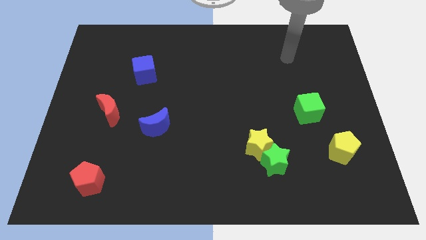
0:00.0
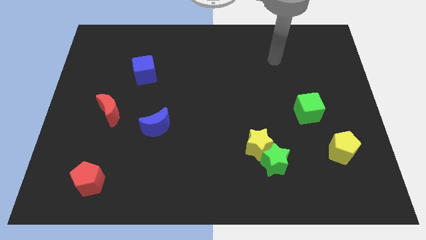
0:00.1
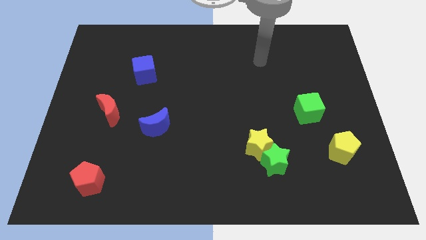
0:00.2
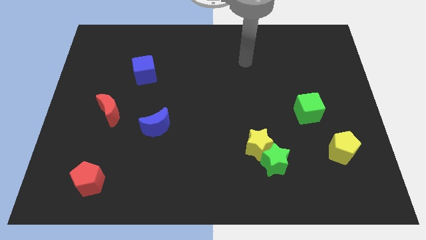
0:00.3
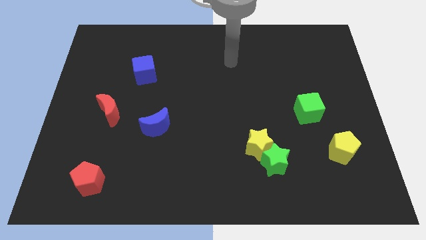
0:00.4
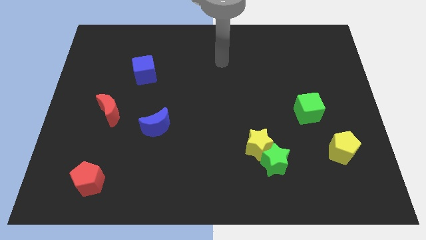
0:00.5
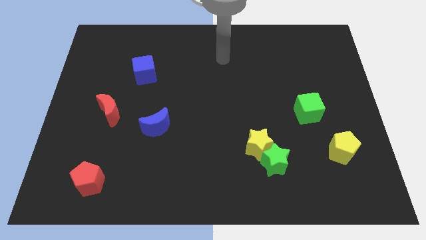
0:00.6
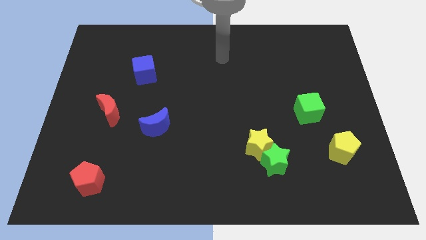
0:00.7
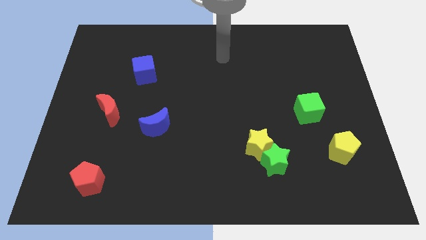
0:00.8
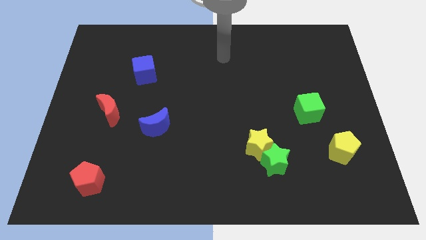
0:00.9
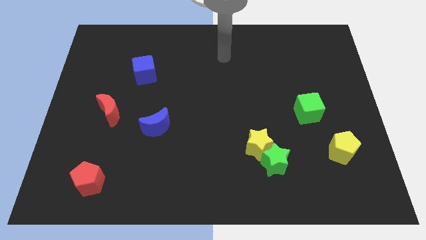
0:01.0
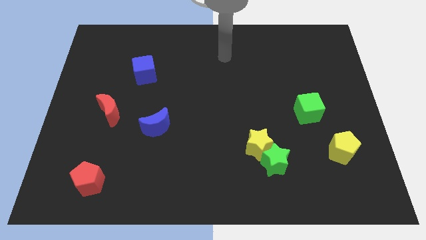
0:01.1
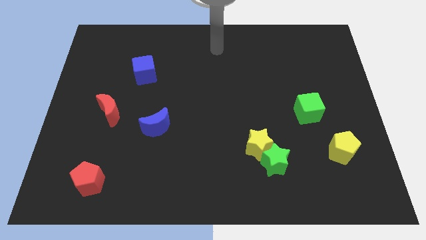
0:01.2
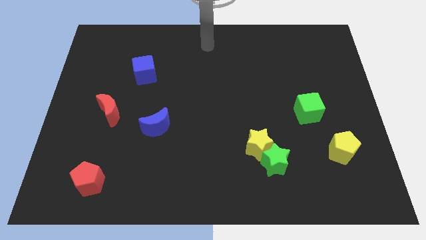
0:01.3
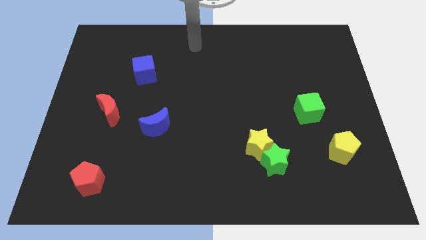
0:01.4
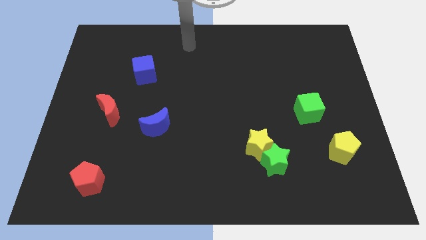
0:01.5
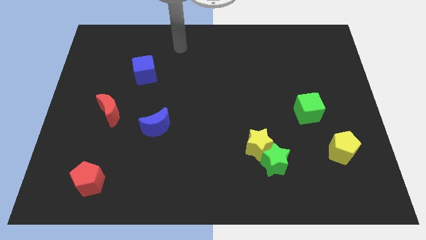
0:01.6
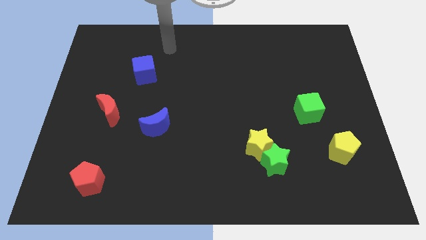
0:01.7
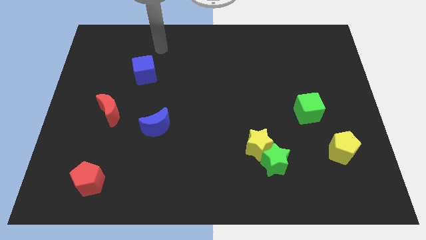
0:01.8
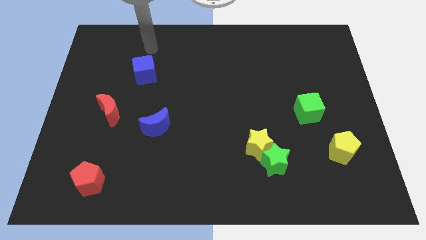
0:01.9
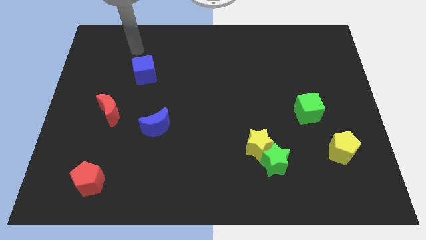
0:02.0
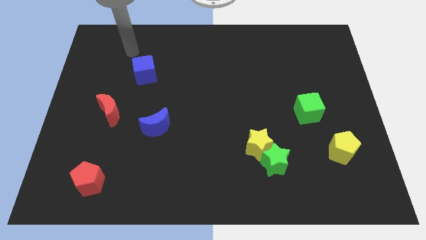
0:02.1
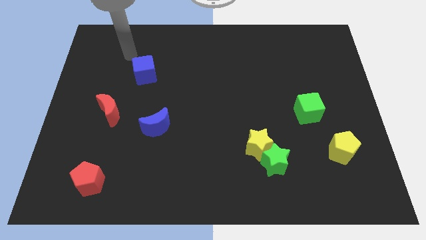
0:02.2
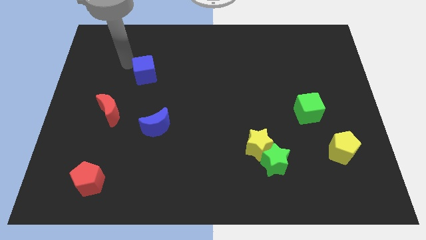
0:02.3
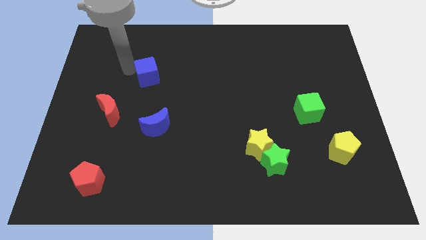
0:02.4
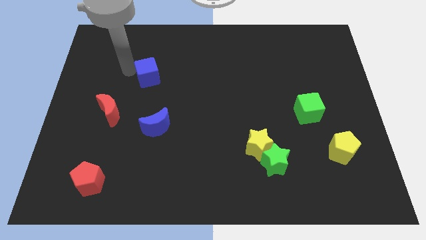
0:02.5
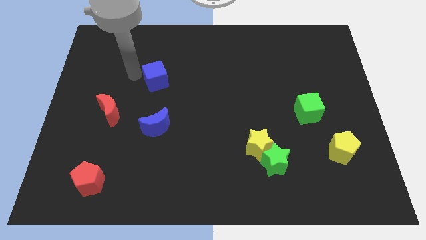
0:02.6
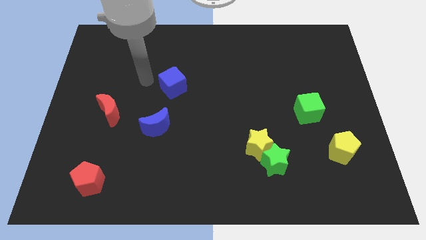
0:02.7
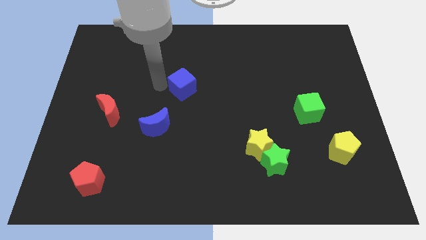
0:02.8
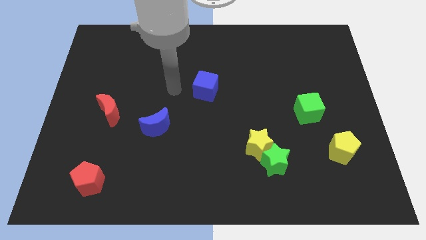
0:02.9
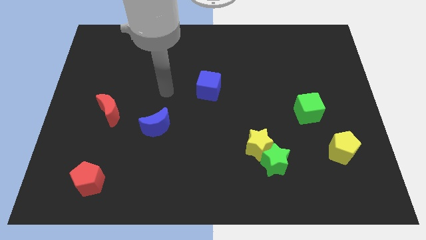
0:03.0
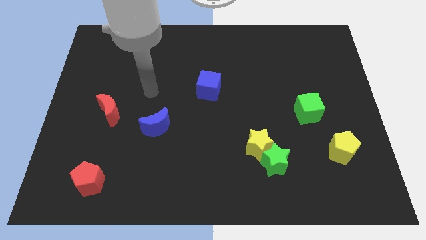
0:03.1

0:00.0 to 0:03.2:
move the blue cube to the center of the board

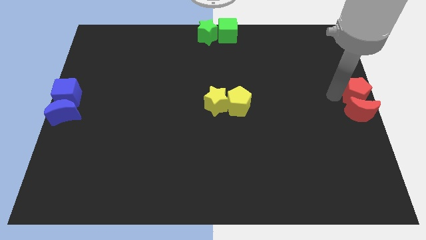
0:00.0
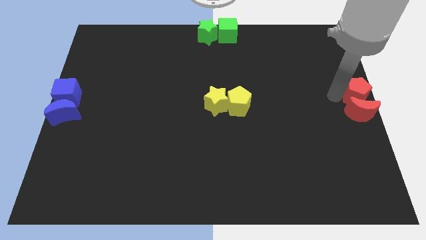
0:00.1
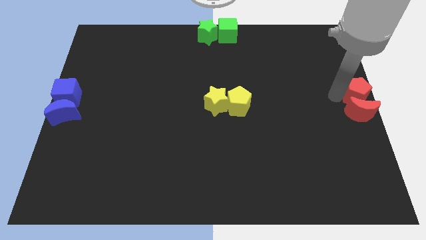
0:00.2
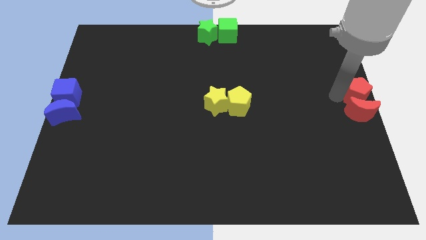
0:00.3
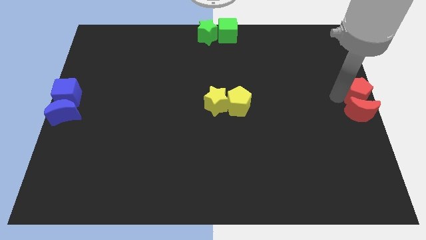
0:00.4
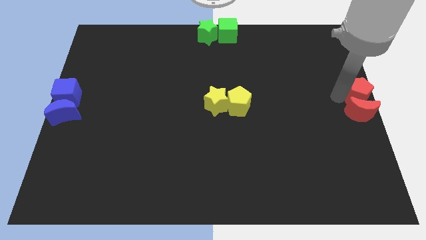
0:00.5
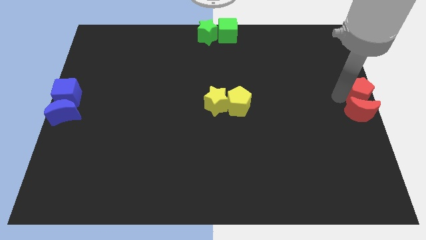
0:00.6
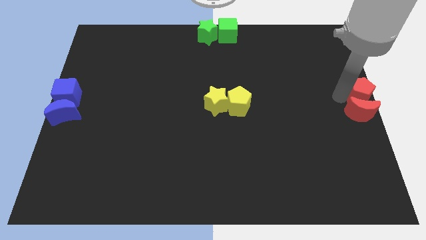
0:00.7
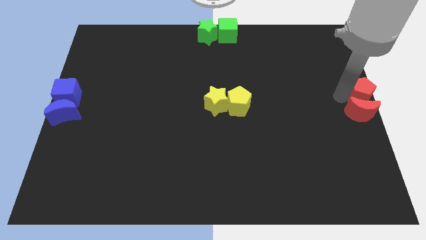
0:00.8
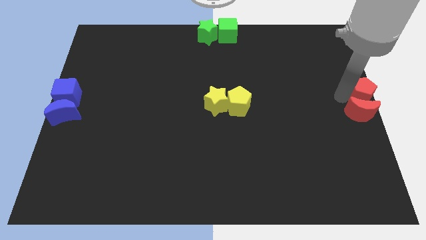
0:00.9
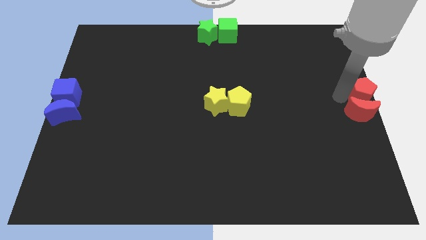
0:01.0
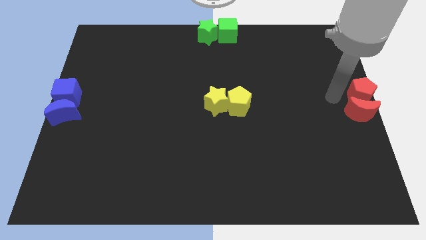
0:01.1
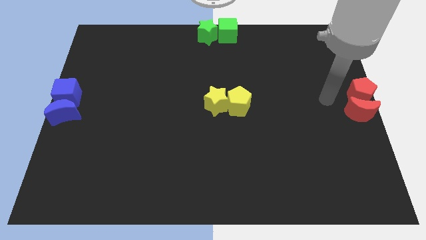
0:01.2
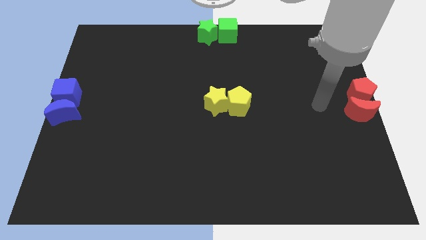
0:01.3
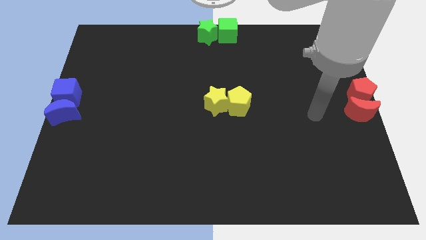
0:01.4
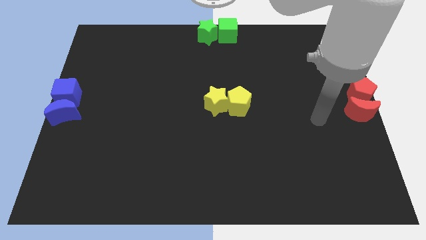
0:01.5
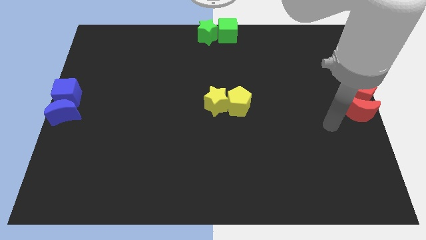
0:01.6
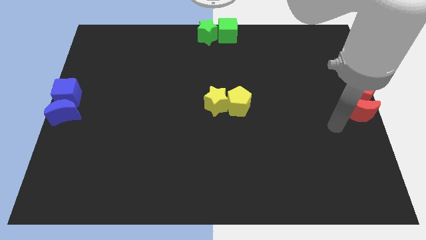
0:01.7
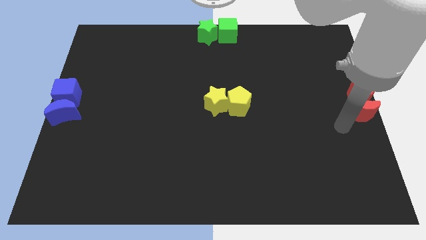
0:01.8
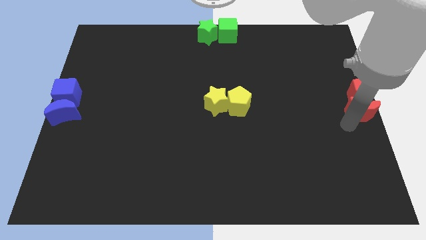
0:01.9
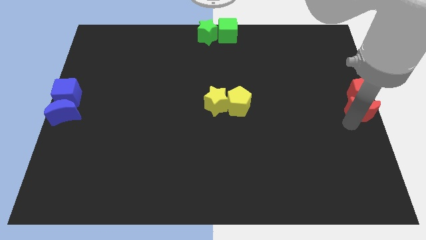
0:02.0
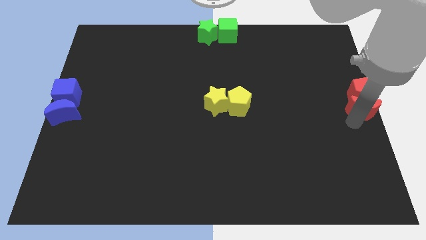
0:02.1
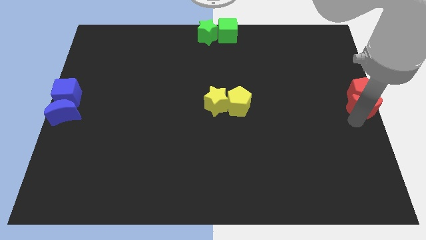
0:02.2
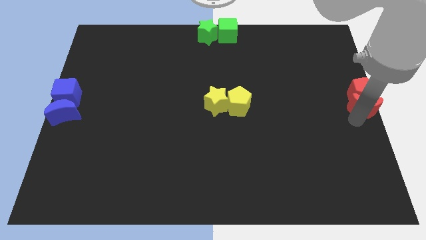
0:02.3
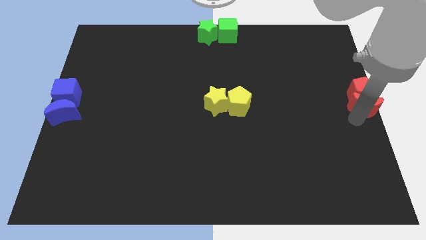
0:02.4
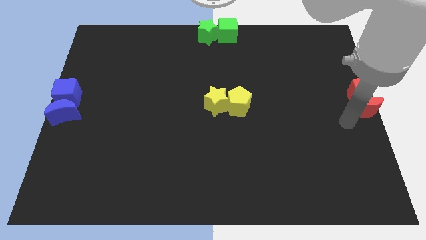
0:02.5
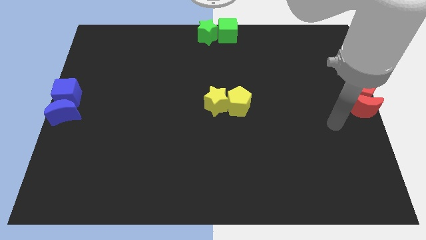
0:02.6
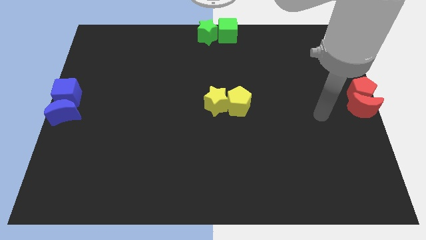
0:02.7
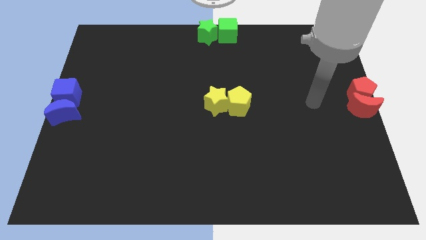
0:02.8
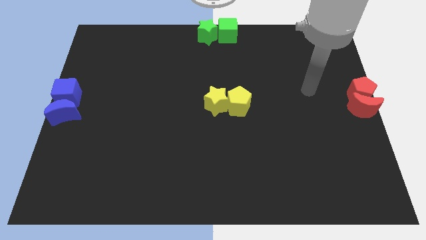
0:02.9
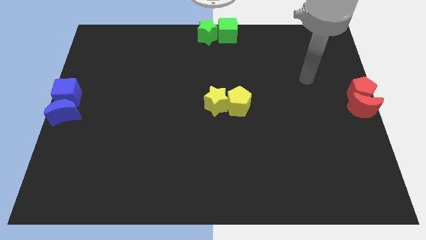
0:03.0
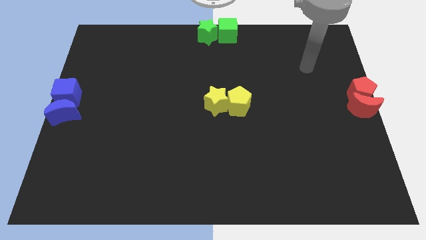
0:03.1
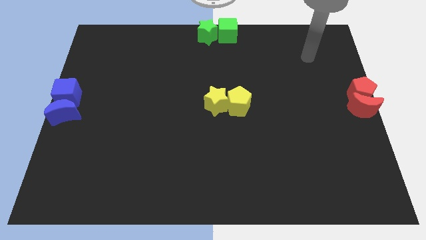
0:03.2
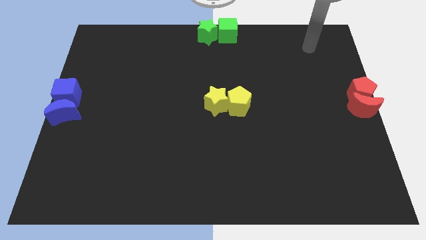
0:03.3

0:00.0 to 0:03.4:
adjust the red blocks at right center of the board

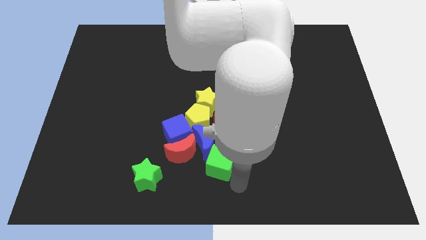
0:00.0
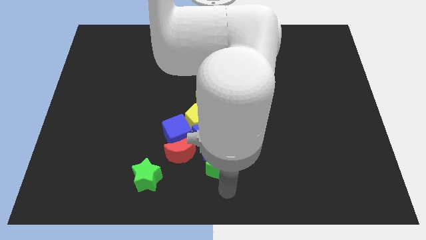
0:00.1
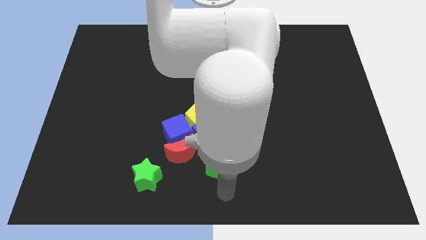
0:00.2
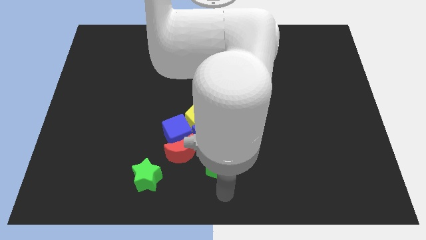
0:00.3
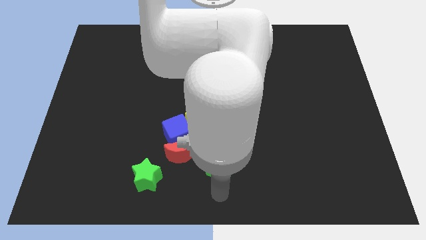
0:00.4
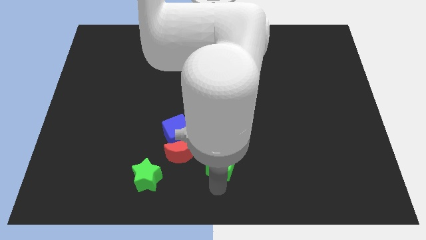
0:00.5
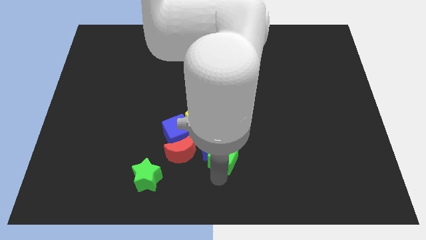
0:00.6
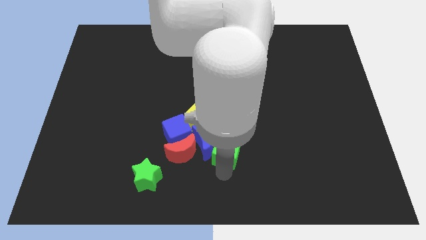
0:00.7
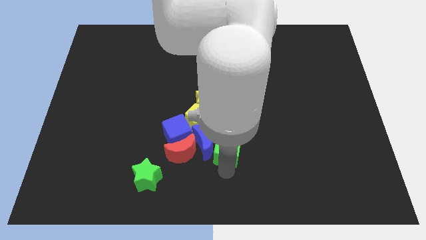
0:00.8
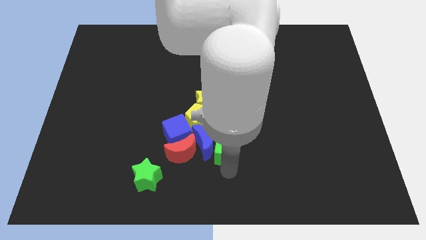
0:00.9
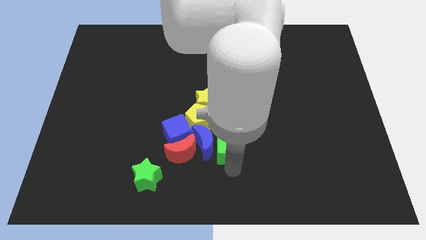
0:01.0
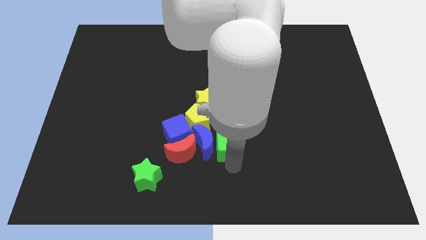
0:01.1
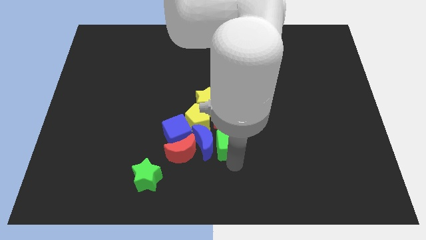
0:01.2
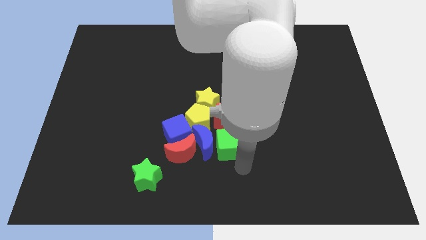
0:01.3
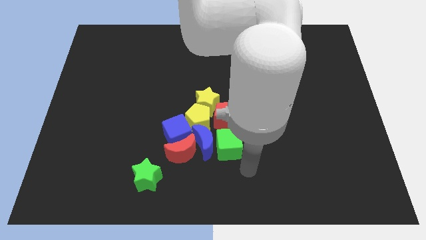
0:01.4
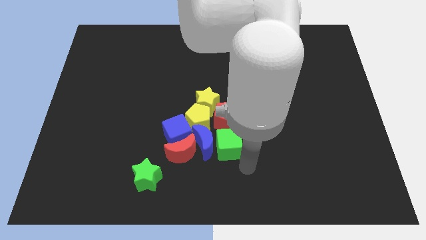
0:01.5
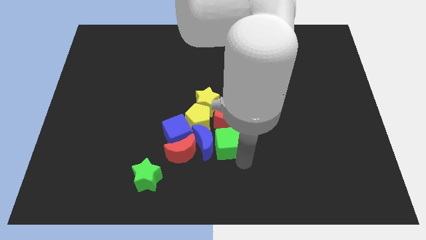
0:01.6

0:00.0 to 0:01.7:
move the green cube to the right of the blue moon

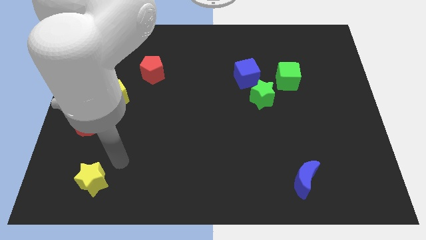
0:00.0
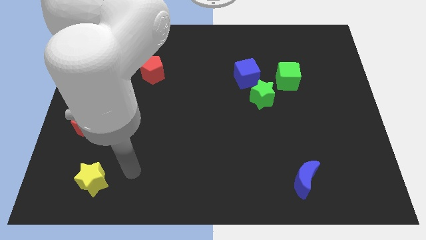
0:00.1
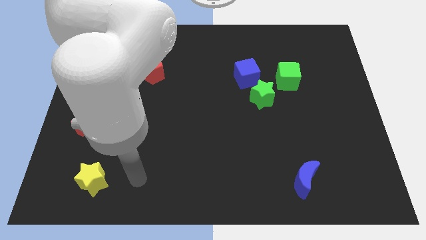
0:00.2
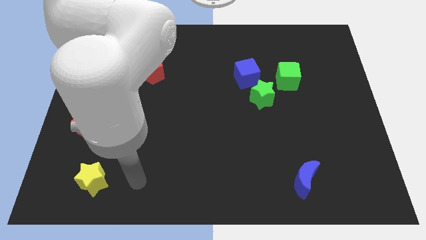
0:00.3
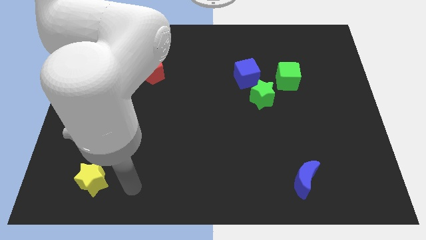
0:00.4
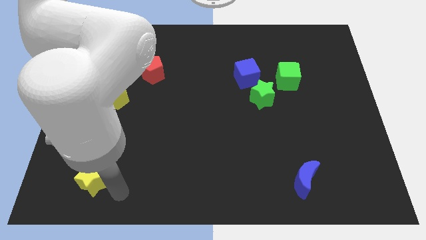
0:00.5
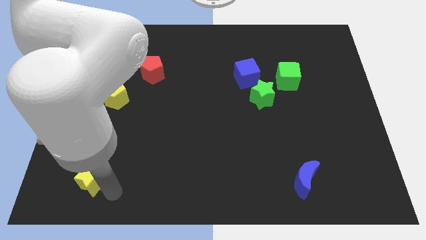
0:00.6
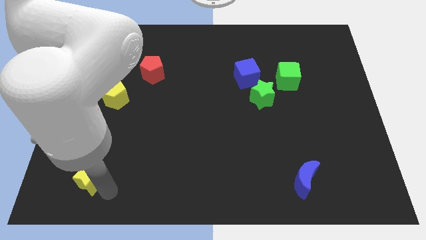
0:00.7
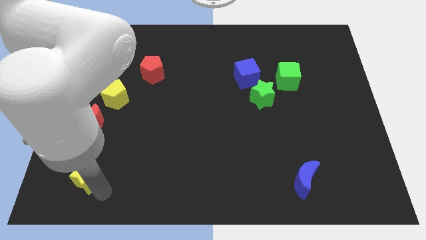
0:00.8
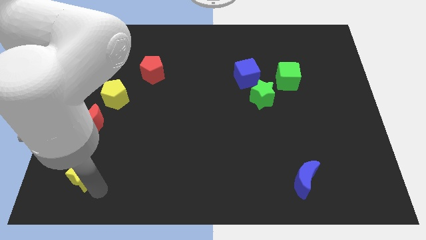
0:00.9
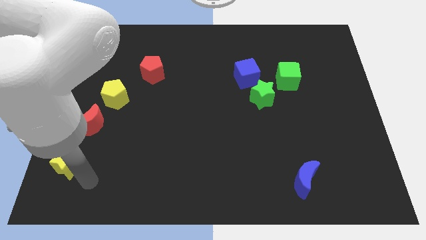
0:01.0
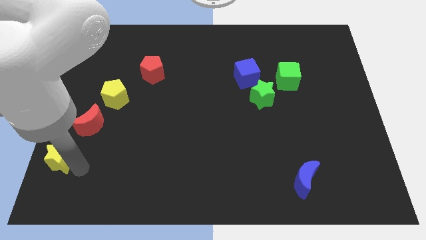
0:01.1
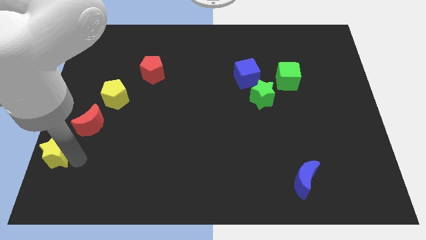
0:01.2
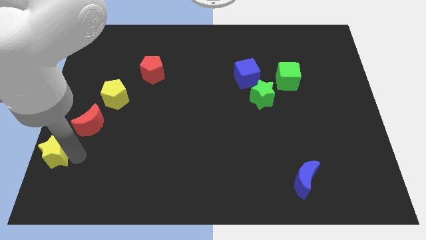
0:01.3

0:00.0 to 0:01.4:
place the yellow star diagonally below the bottom left side of the red crescent
